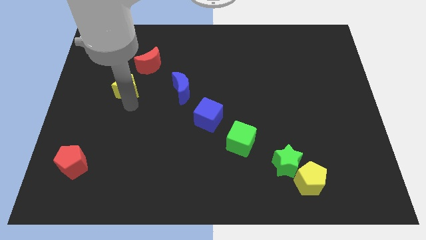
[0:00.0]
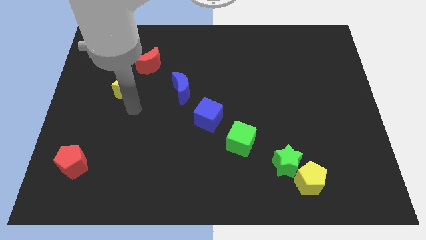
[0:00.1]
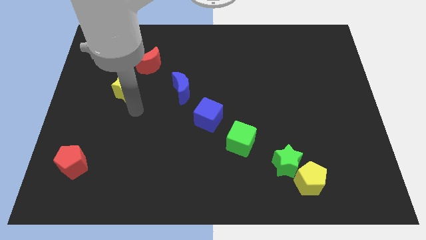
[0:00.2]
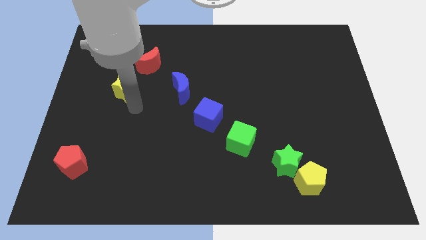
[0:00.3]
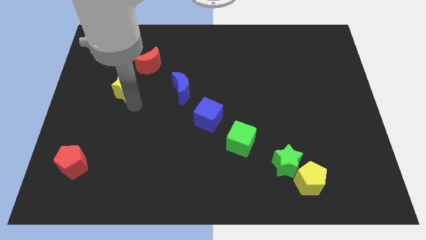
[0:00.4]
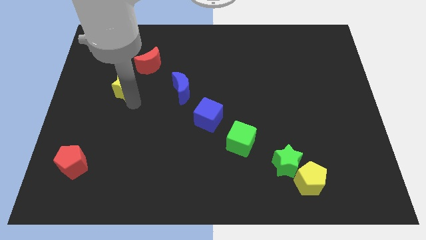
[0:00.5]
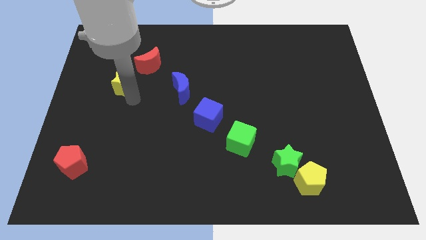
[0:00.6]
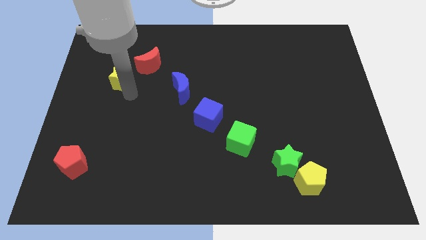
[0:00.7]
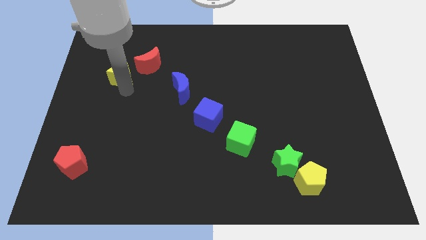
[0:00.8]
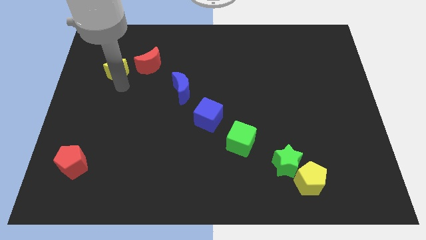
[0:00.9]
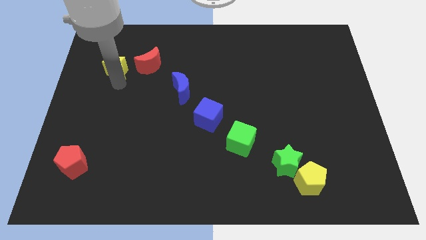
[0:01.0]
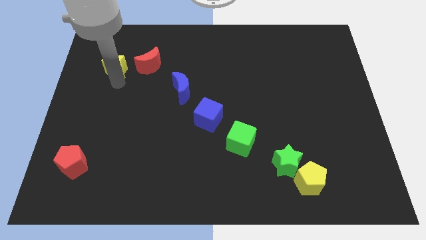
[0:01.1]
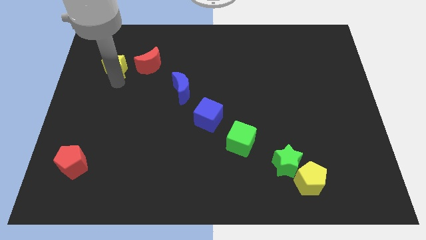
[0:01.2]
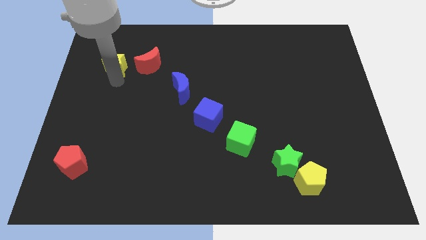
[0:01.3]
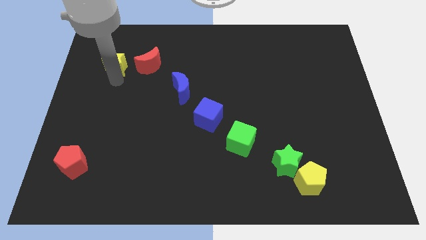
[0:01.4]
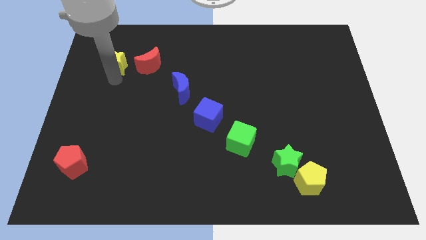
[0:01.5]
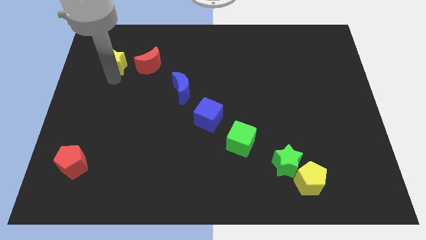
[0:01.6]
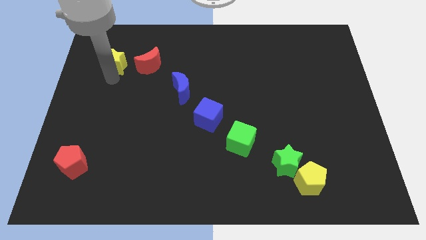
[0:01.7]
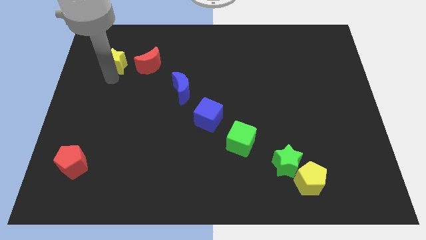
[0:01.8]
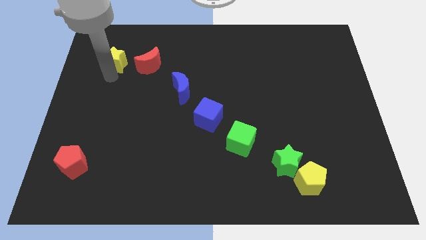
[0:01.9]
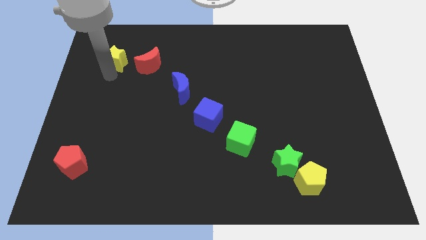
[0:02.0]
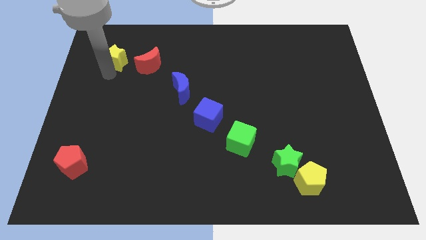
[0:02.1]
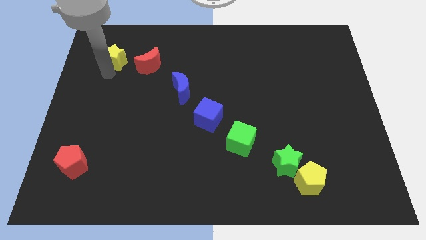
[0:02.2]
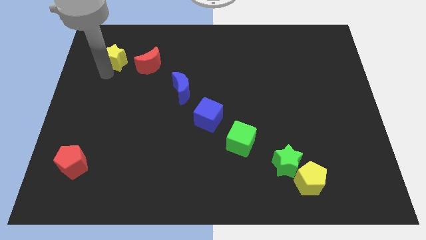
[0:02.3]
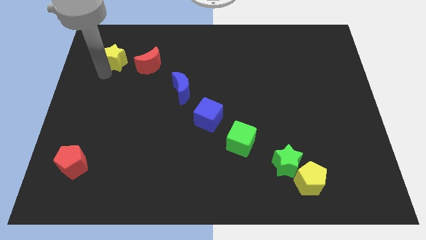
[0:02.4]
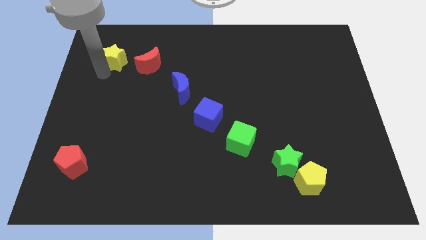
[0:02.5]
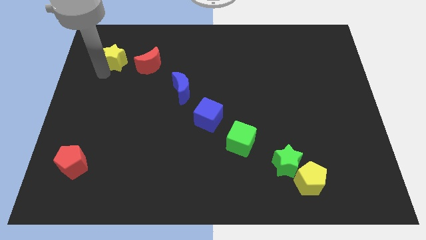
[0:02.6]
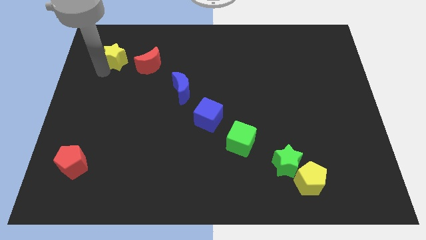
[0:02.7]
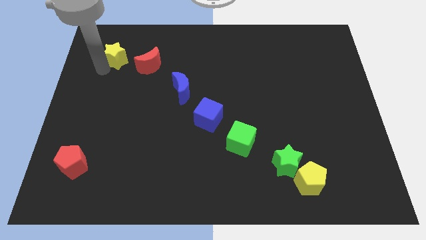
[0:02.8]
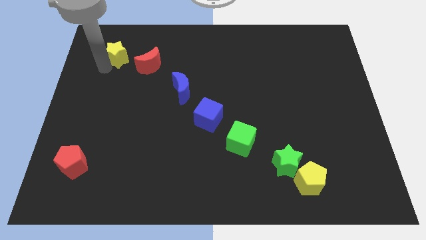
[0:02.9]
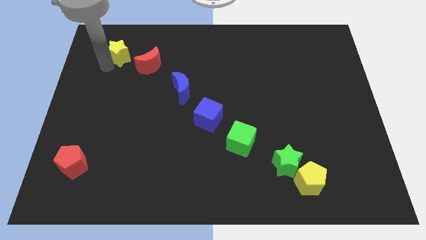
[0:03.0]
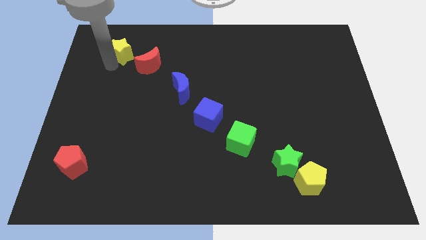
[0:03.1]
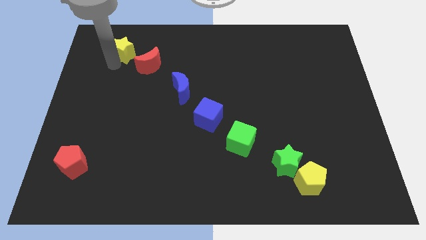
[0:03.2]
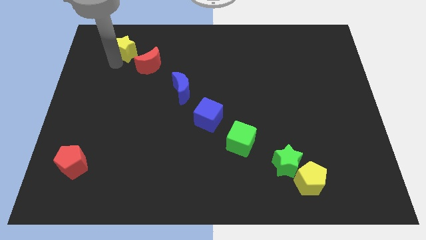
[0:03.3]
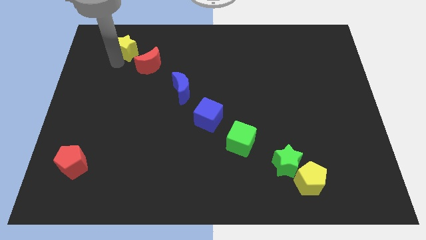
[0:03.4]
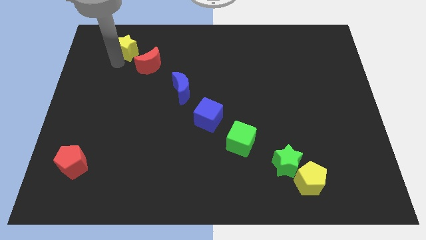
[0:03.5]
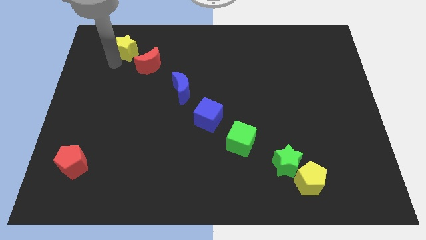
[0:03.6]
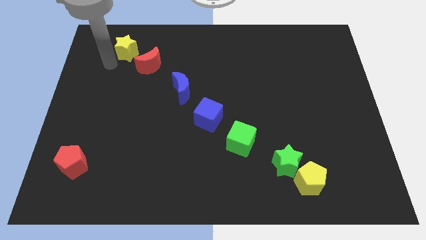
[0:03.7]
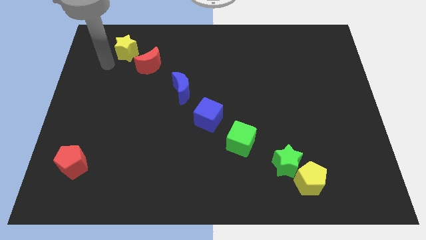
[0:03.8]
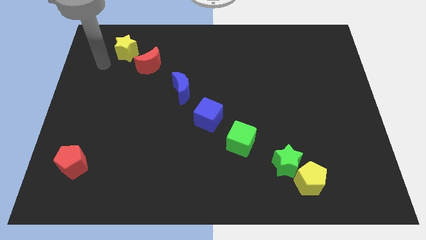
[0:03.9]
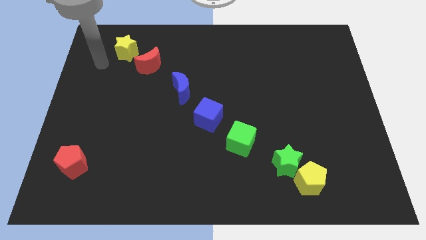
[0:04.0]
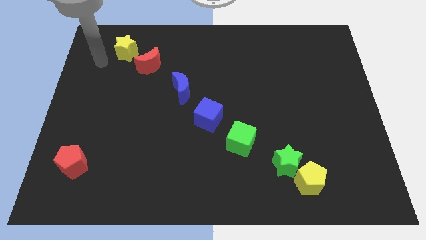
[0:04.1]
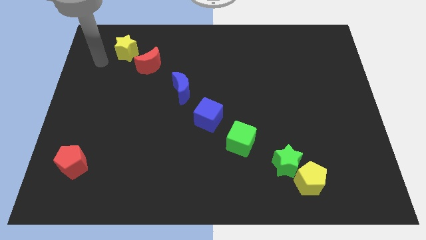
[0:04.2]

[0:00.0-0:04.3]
place the yellow star diagonally at the top side of the red crescent

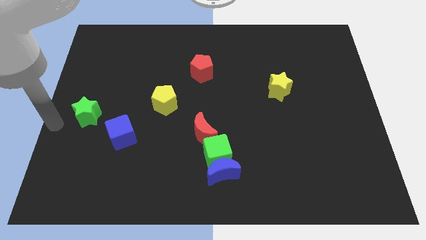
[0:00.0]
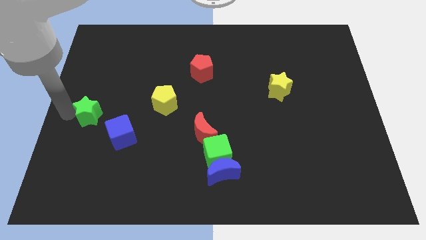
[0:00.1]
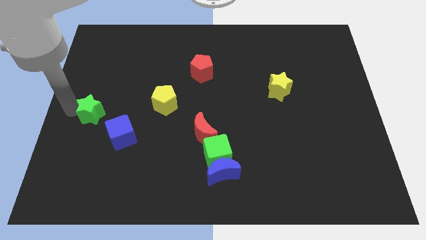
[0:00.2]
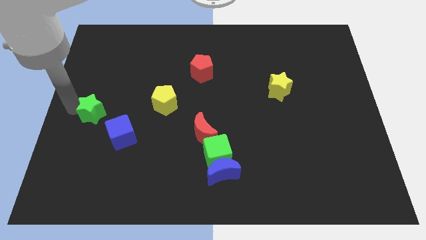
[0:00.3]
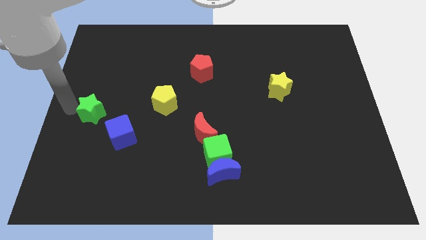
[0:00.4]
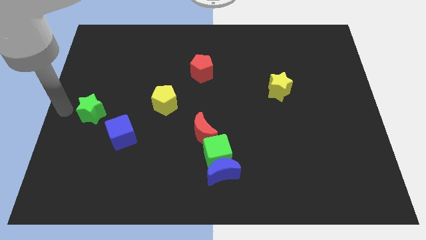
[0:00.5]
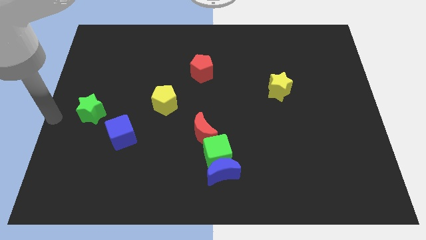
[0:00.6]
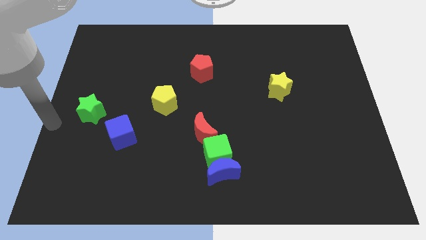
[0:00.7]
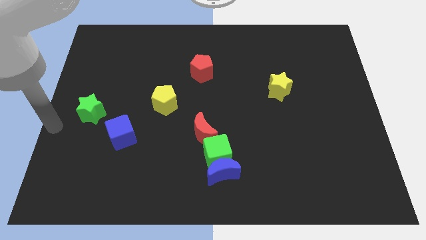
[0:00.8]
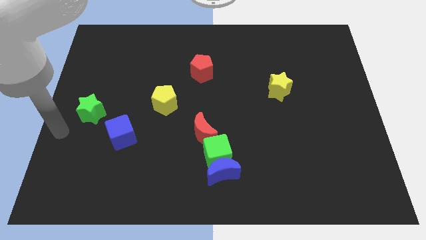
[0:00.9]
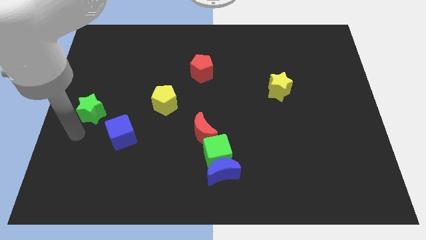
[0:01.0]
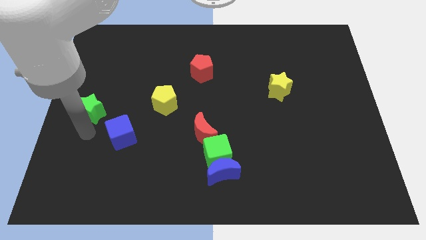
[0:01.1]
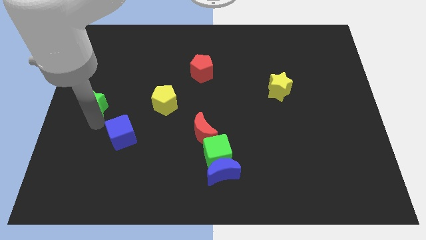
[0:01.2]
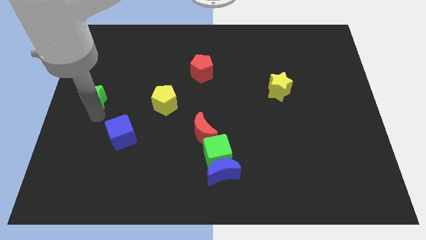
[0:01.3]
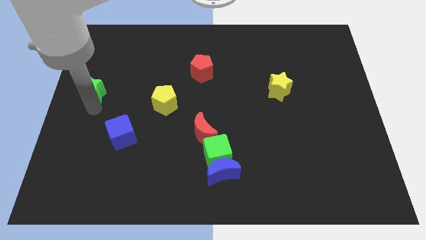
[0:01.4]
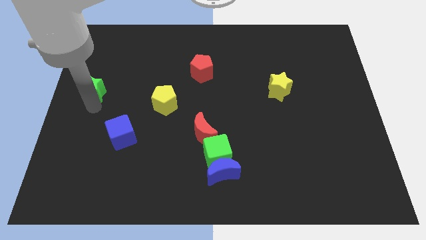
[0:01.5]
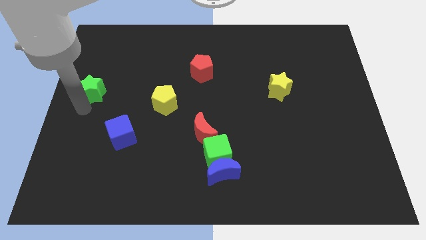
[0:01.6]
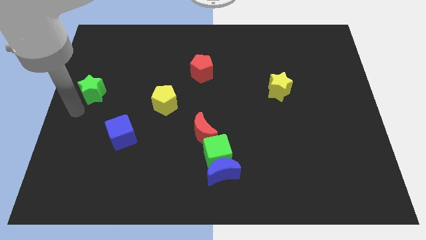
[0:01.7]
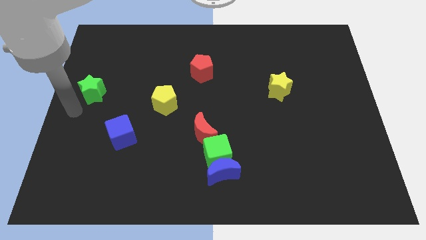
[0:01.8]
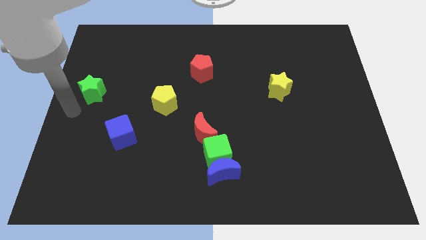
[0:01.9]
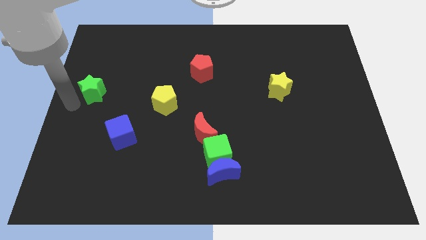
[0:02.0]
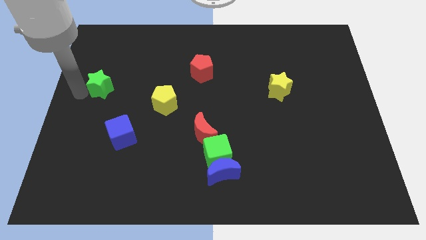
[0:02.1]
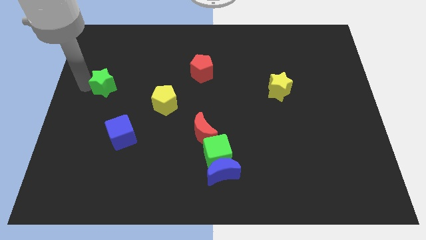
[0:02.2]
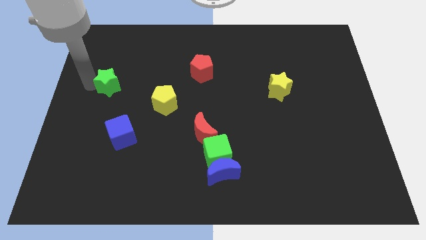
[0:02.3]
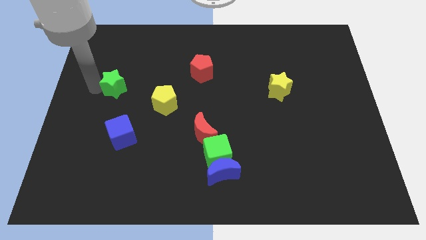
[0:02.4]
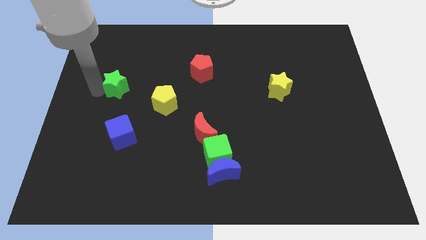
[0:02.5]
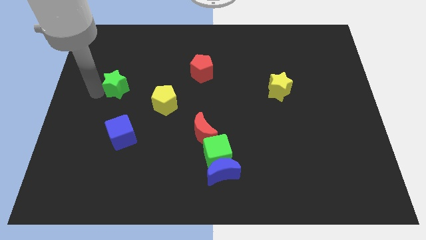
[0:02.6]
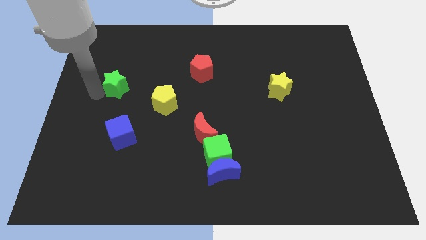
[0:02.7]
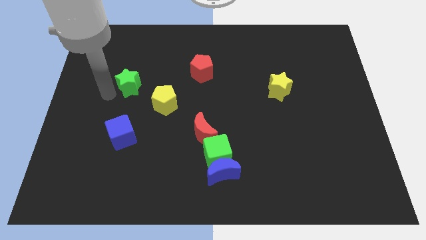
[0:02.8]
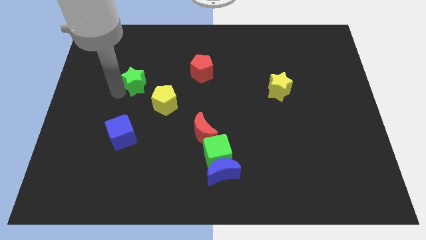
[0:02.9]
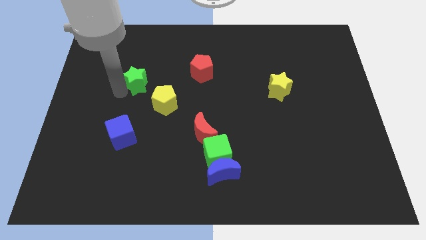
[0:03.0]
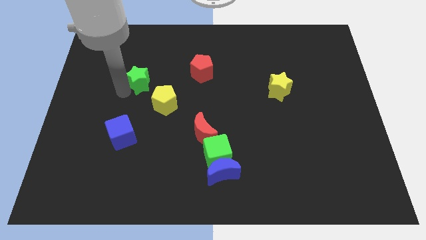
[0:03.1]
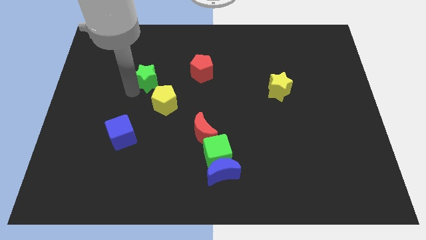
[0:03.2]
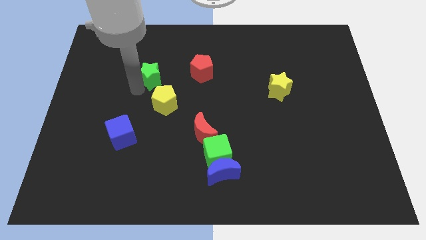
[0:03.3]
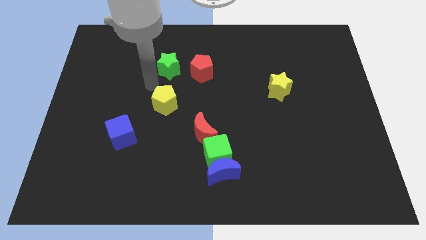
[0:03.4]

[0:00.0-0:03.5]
place the green star to the left of the red pentagon

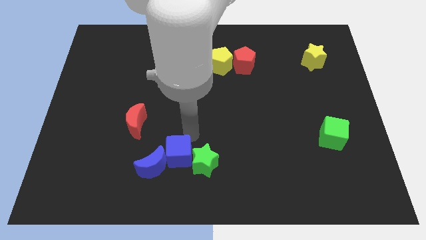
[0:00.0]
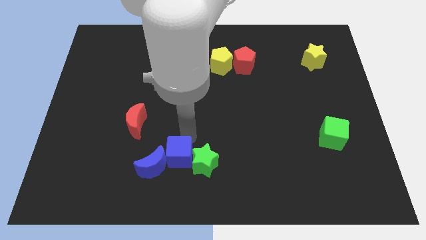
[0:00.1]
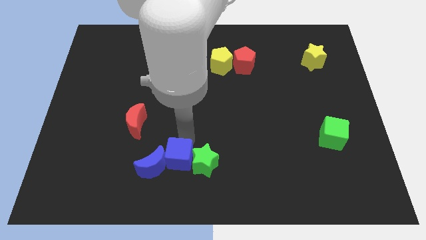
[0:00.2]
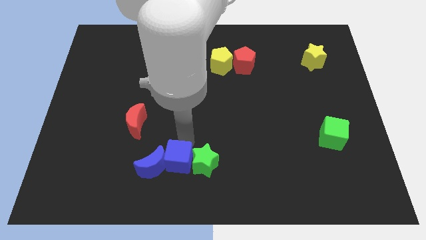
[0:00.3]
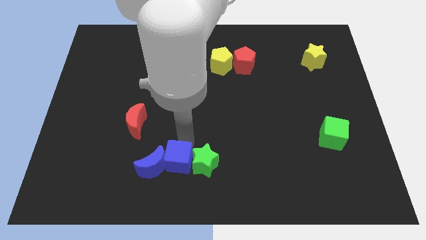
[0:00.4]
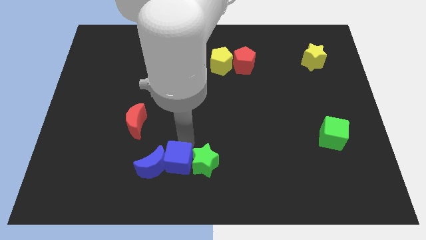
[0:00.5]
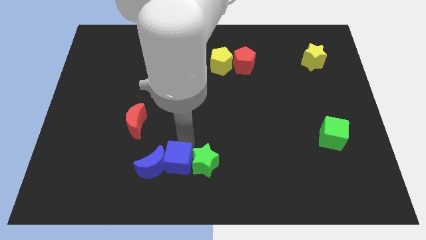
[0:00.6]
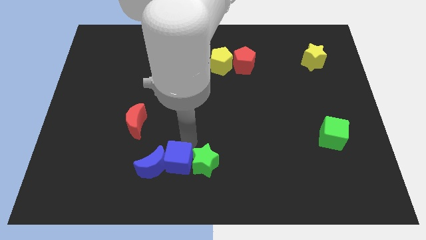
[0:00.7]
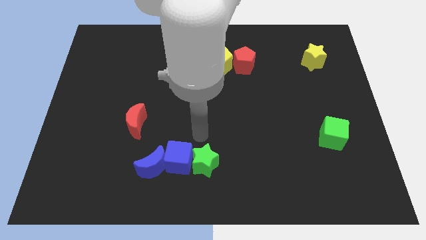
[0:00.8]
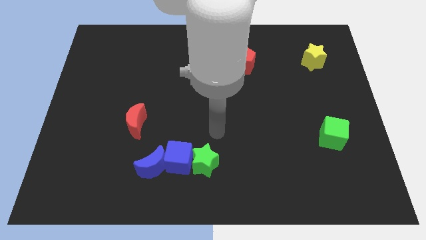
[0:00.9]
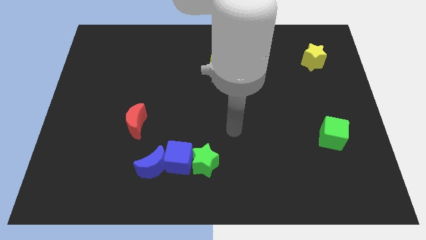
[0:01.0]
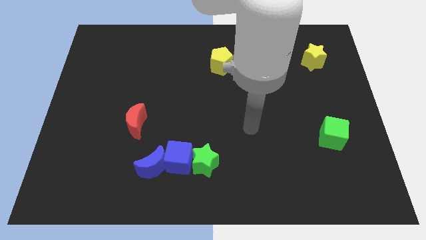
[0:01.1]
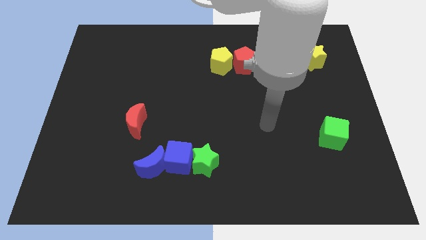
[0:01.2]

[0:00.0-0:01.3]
slightly push the blue cube in between green star and blue crescent

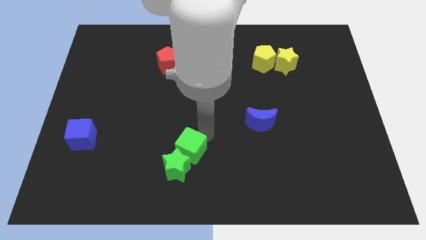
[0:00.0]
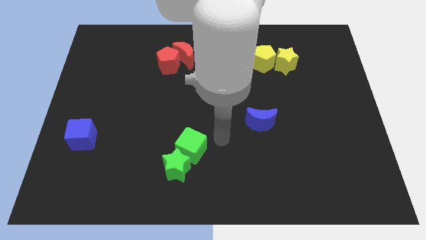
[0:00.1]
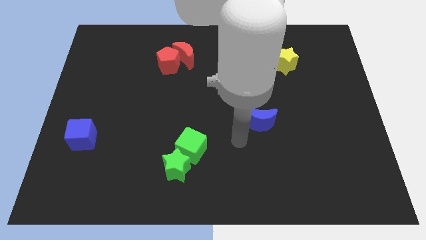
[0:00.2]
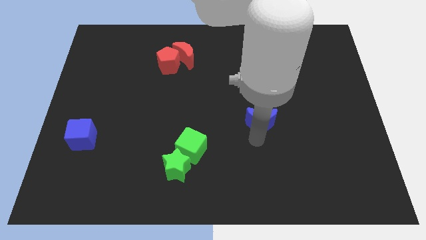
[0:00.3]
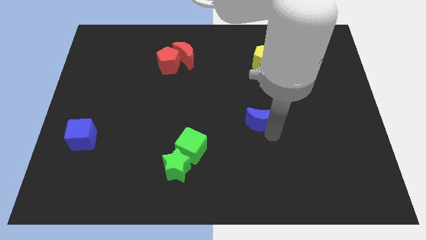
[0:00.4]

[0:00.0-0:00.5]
point your arm at the bottom of the blue crescent
